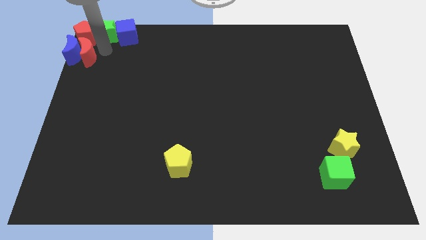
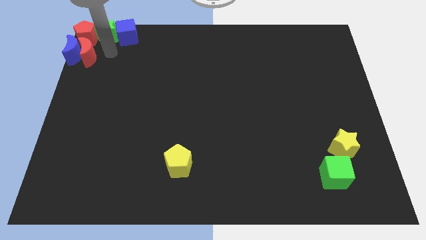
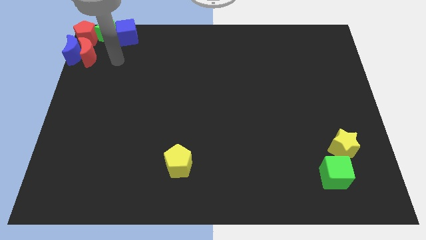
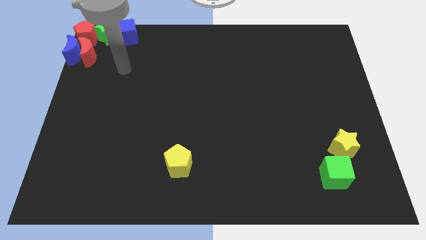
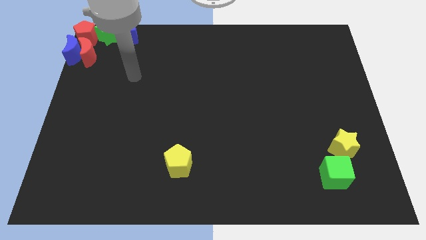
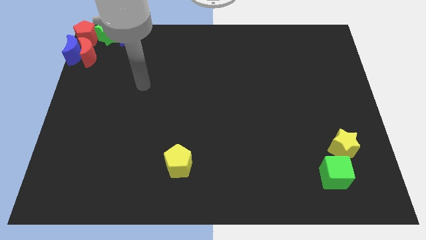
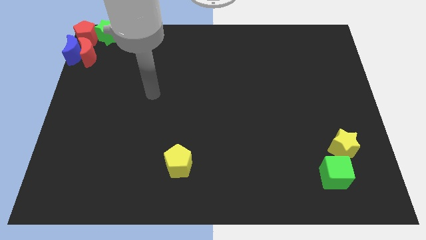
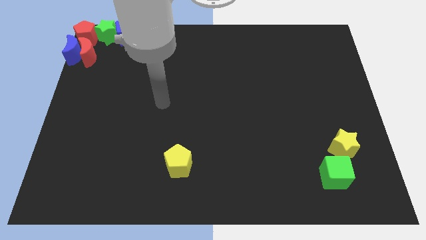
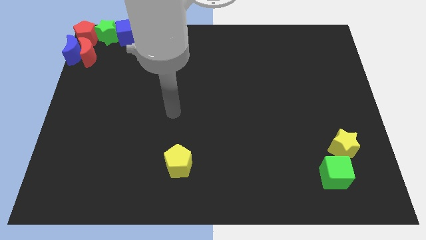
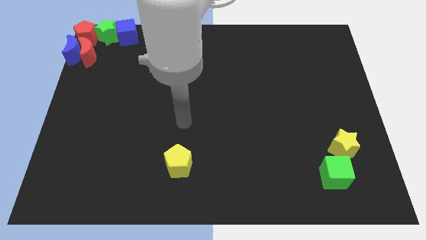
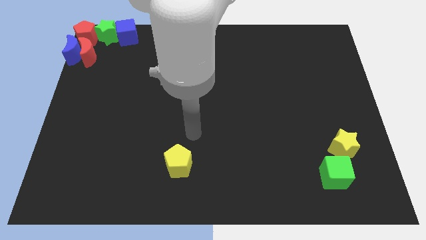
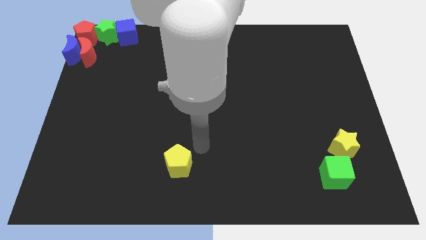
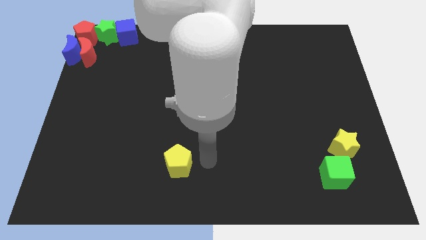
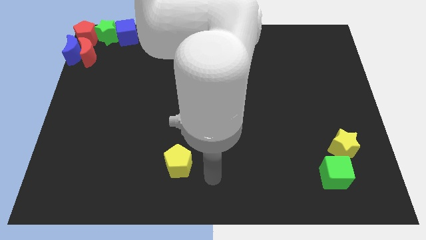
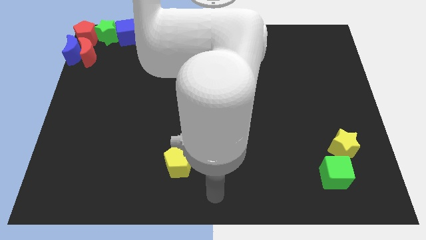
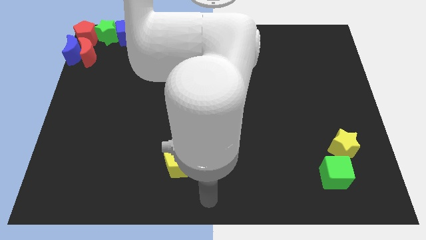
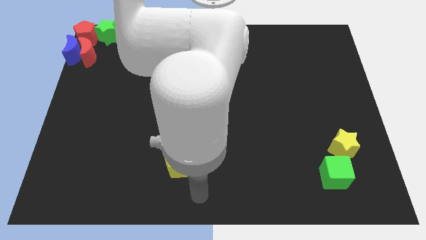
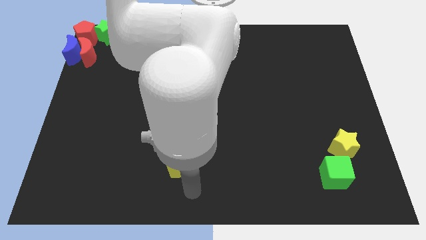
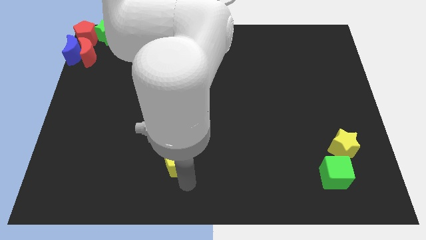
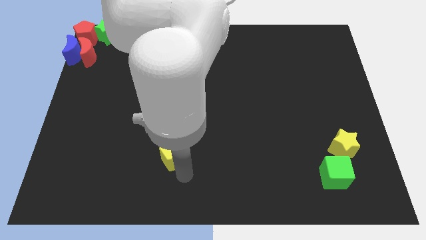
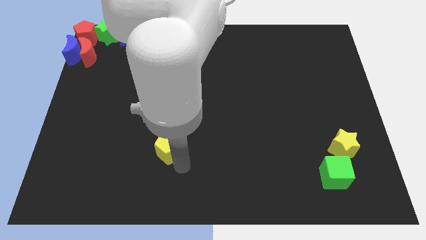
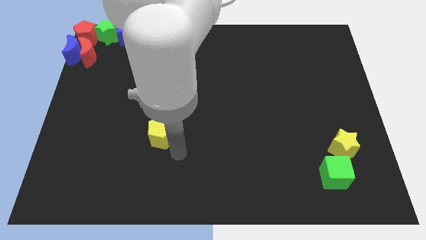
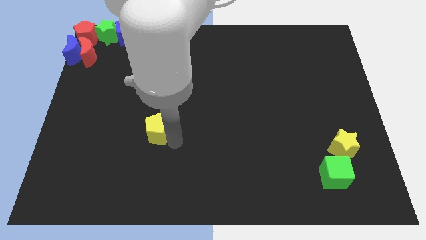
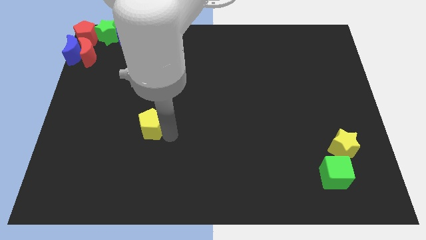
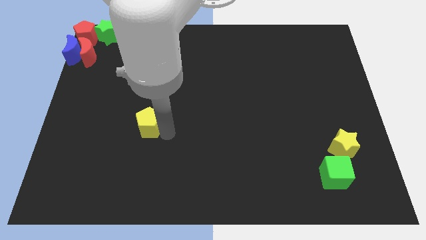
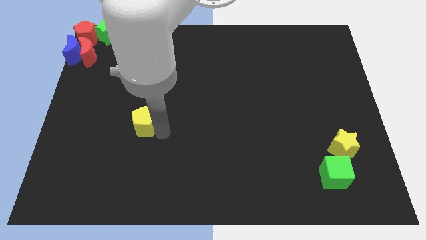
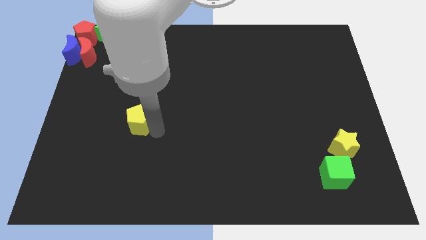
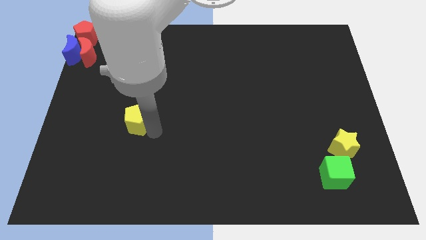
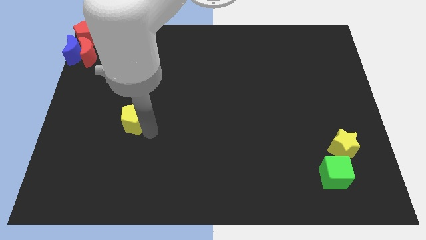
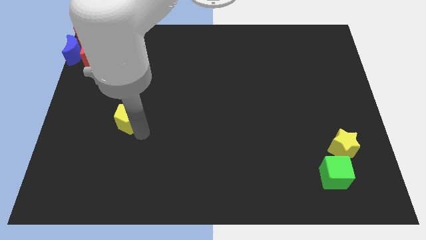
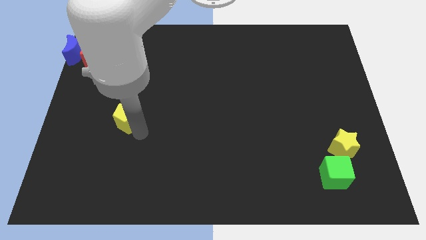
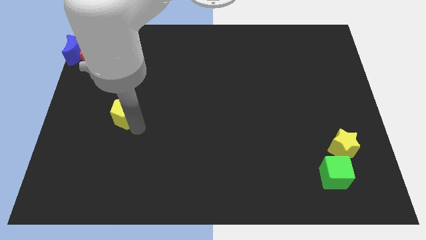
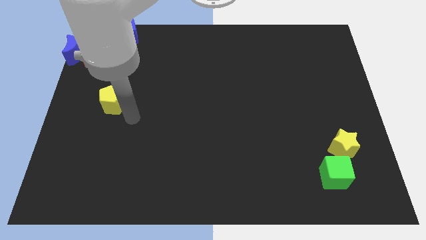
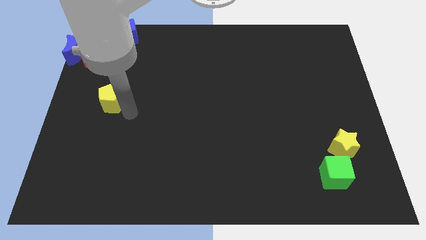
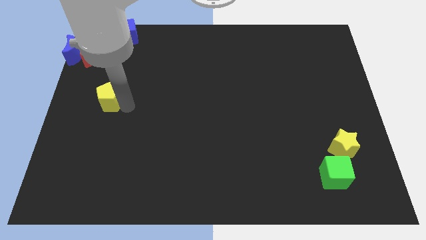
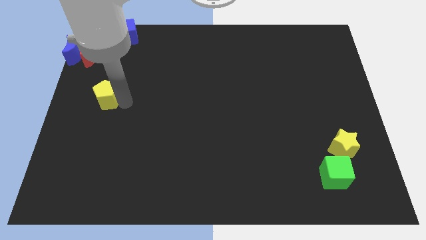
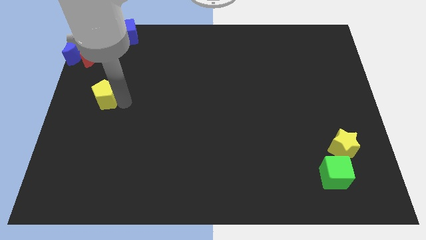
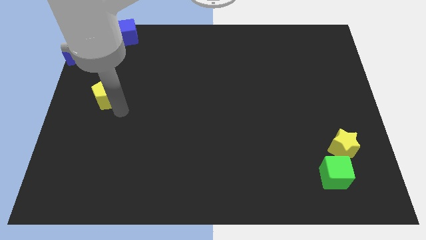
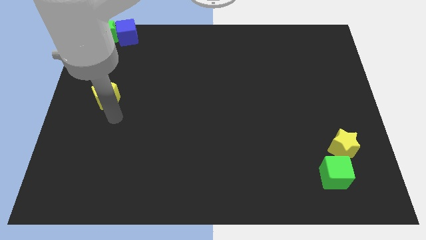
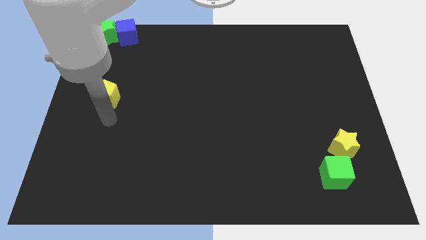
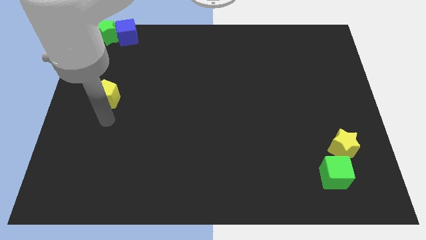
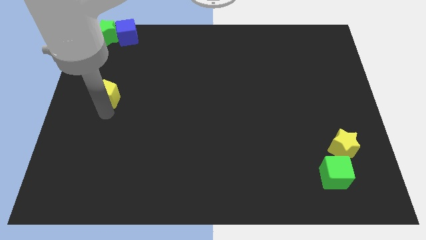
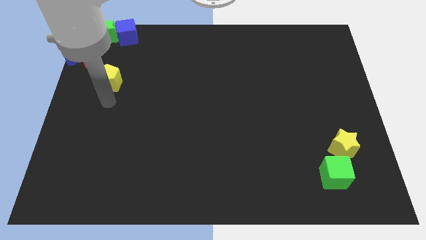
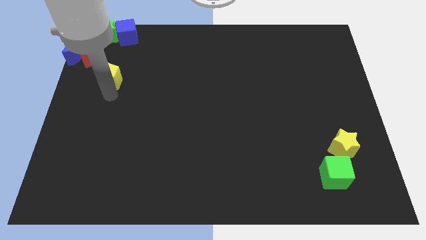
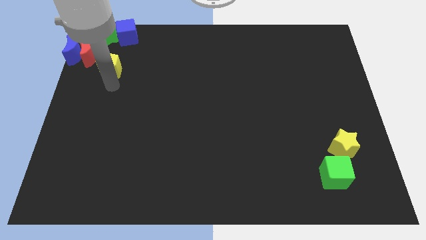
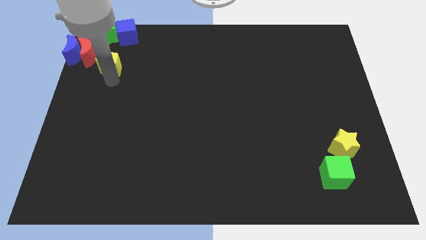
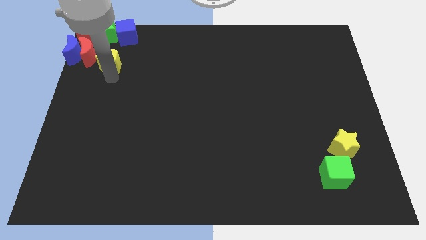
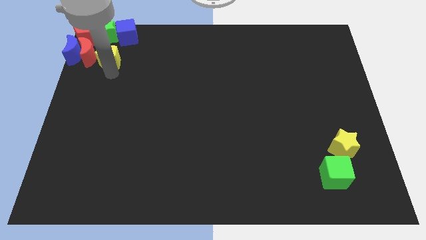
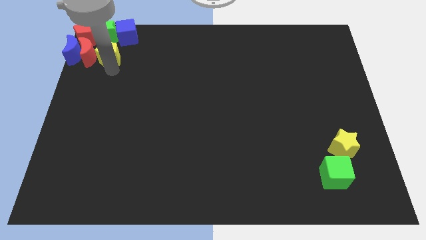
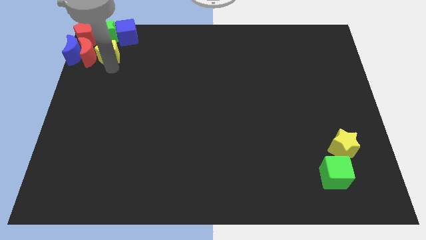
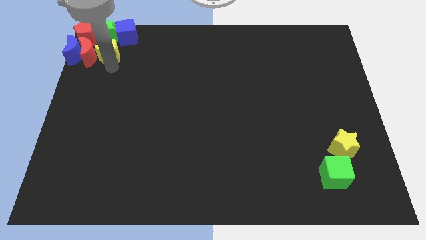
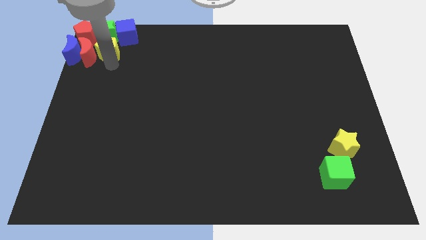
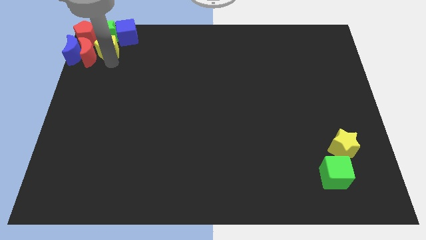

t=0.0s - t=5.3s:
slide the yellow pentagon close to the right side of the red crescent

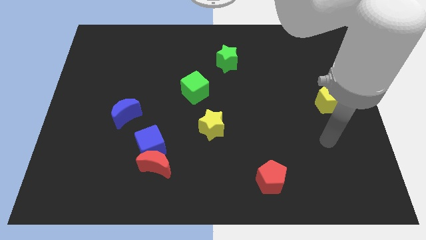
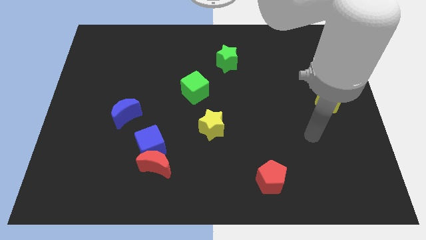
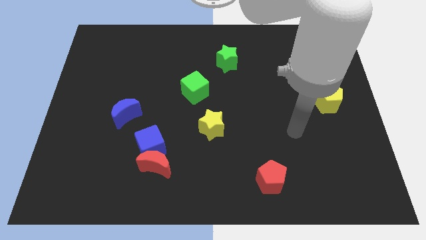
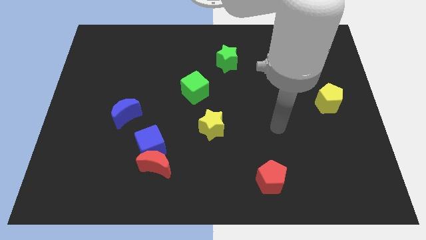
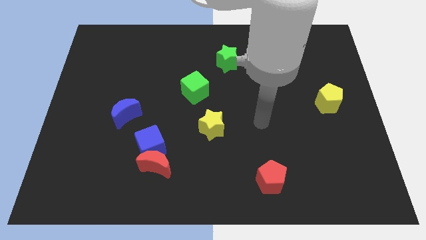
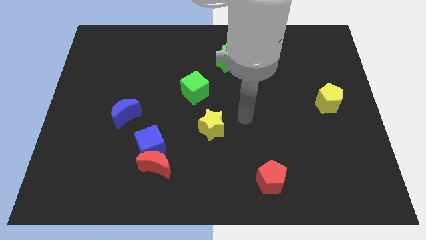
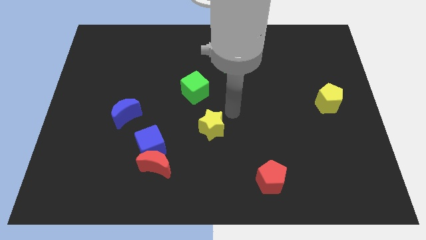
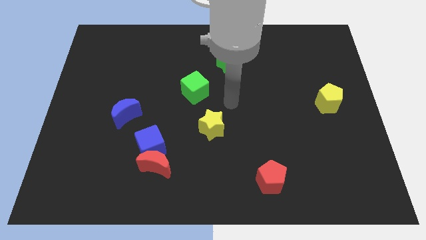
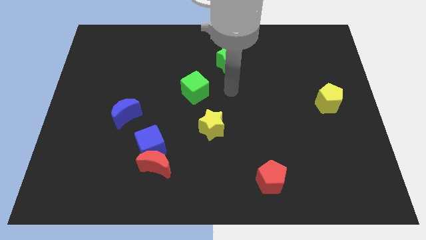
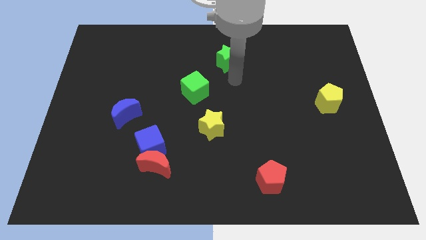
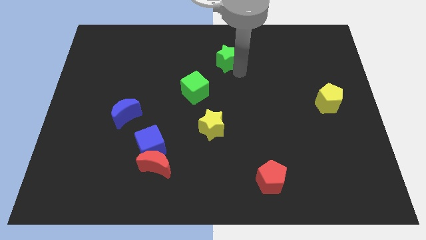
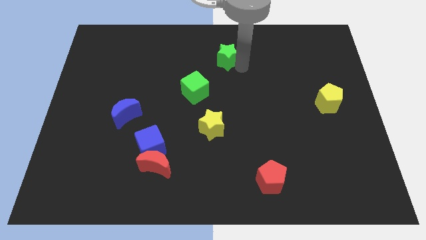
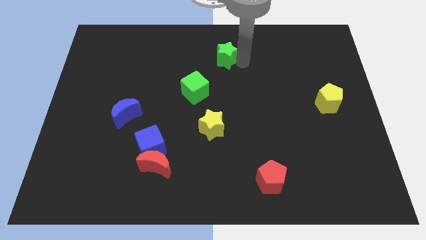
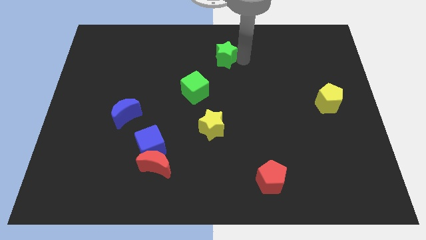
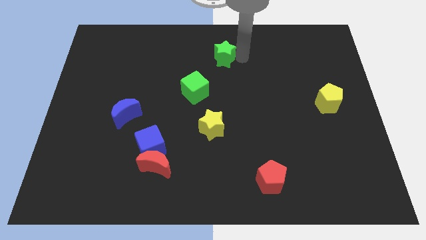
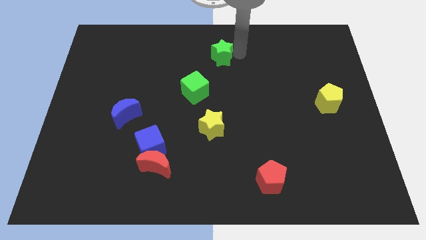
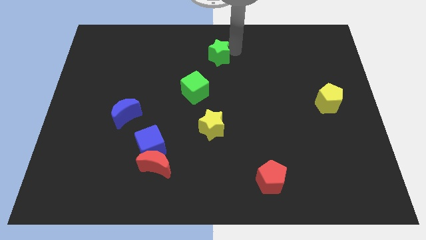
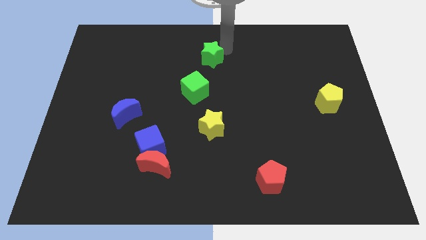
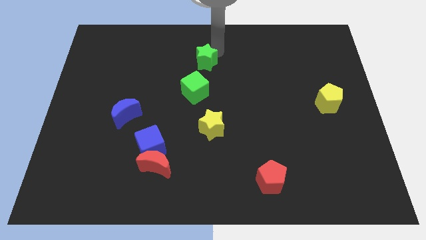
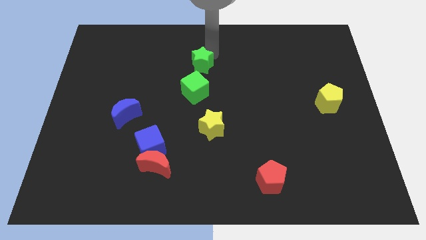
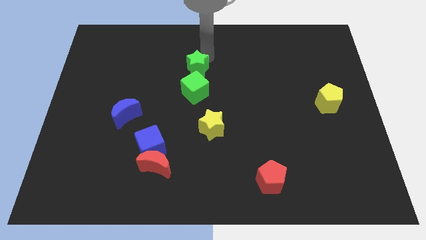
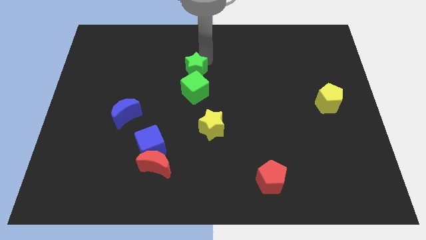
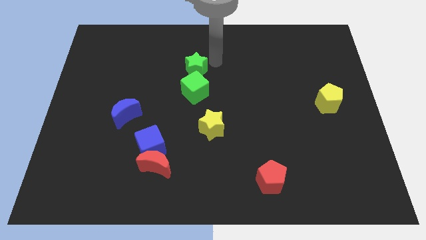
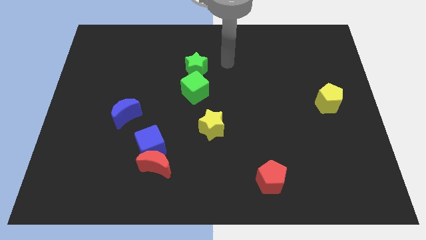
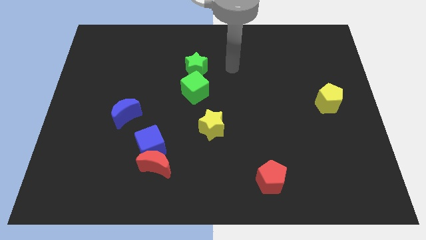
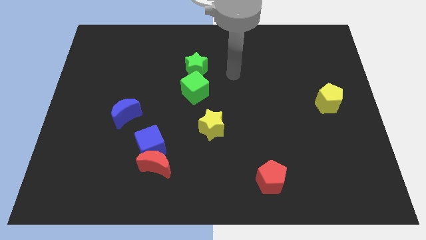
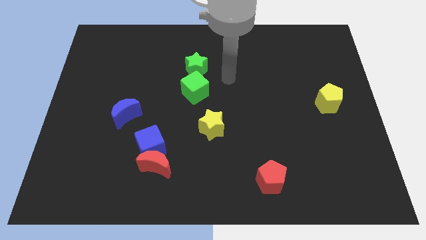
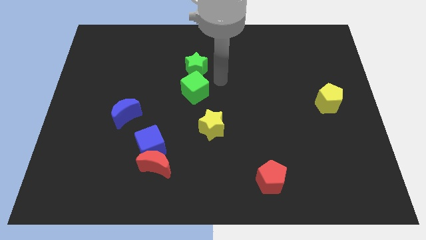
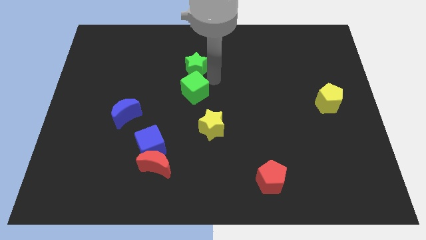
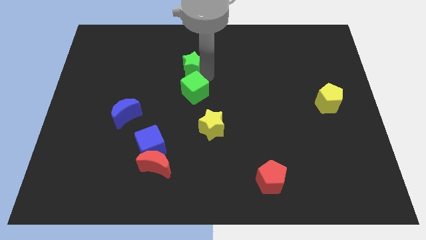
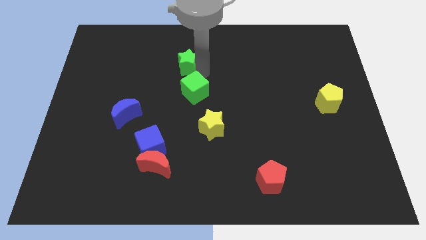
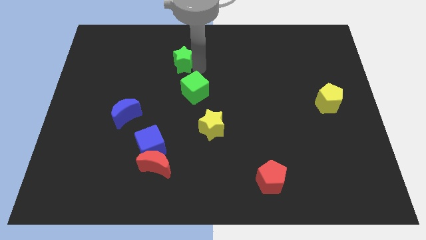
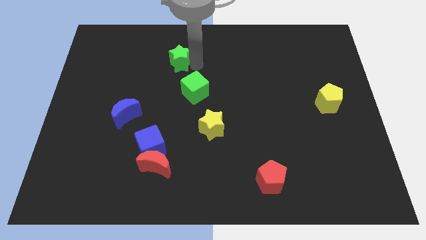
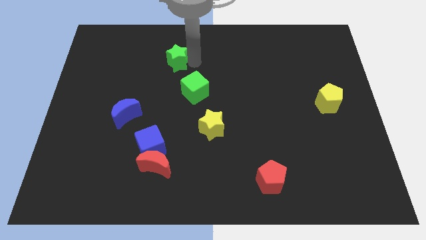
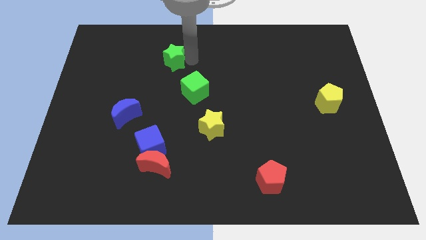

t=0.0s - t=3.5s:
place the green star above the green cube
